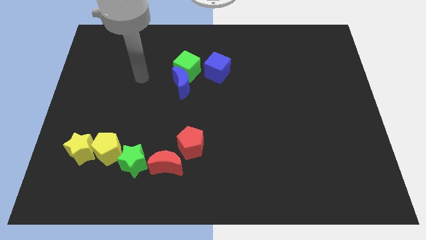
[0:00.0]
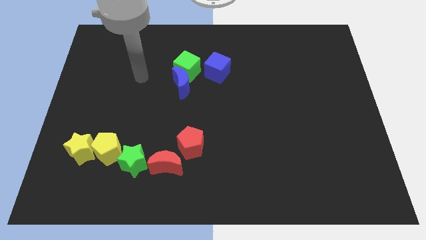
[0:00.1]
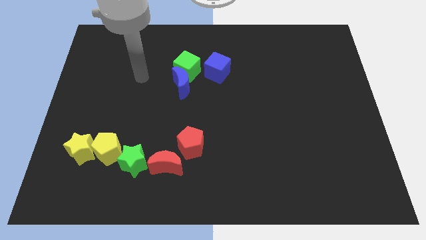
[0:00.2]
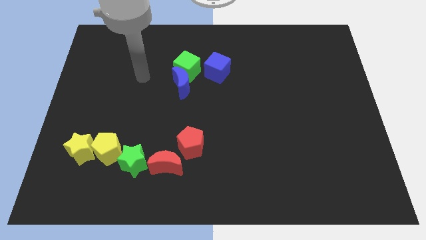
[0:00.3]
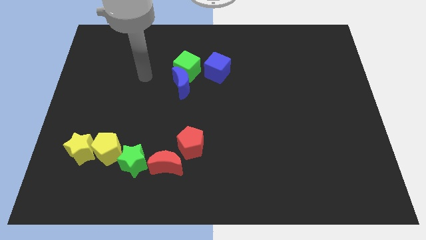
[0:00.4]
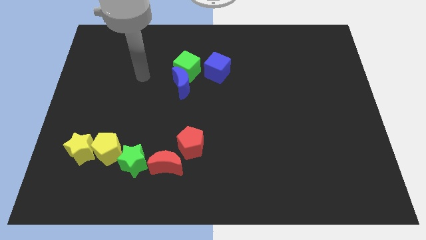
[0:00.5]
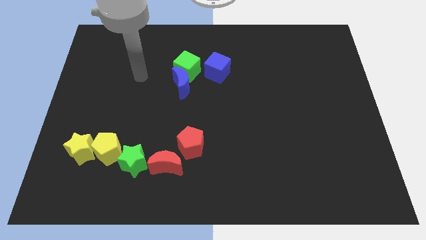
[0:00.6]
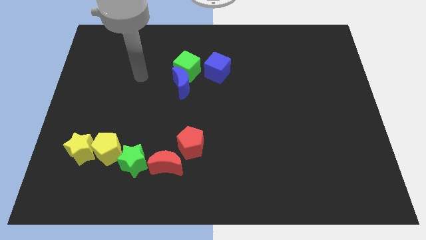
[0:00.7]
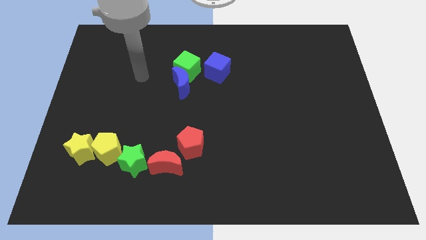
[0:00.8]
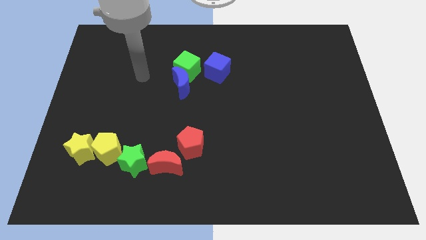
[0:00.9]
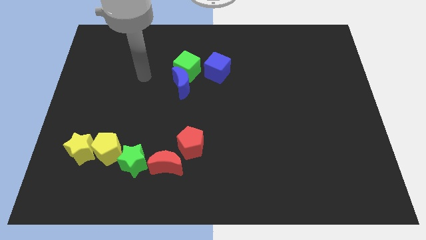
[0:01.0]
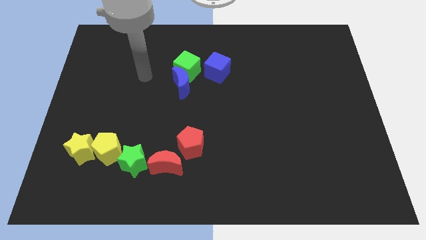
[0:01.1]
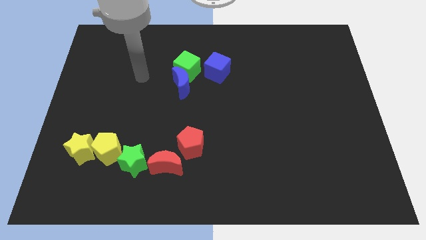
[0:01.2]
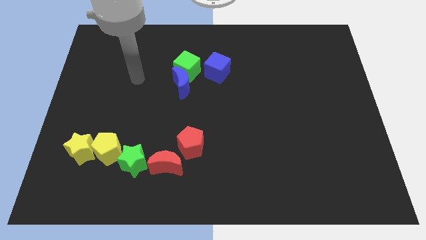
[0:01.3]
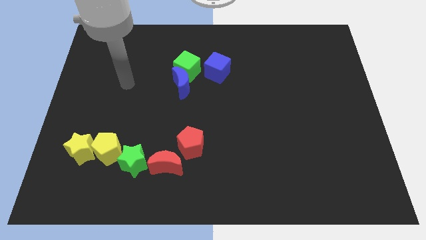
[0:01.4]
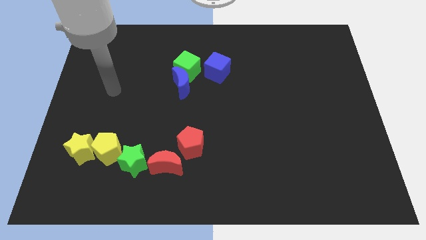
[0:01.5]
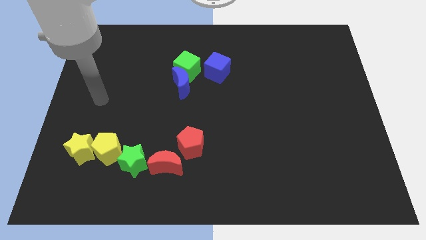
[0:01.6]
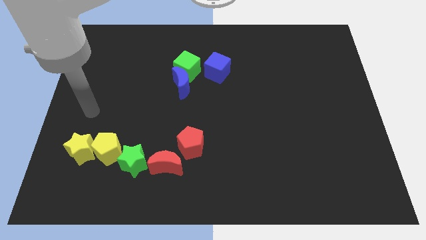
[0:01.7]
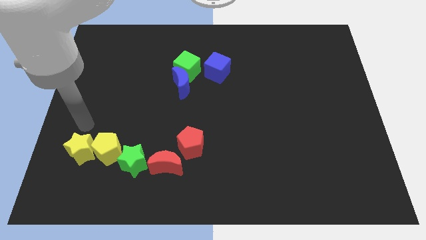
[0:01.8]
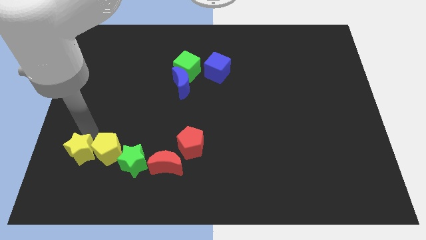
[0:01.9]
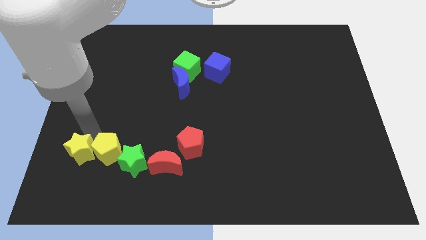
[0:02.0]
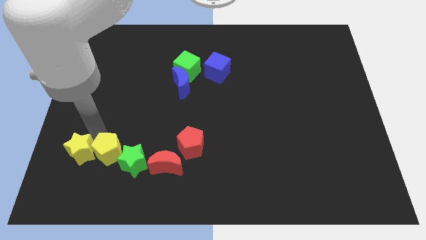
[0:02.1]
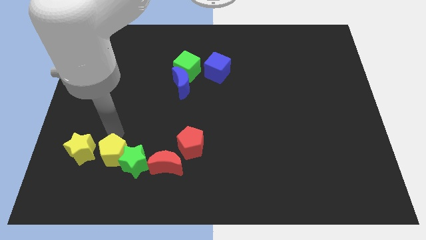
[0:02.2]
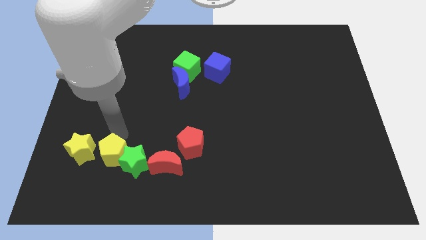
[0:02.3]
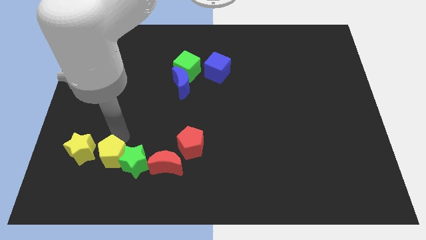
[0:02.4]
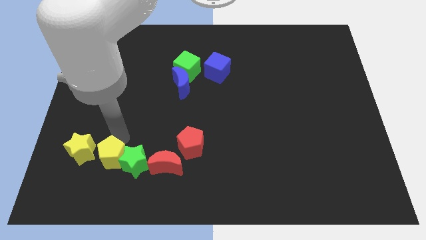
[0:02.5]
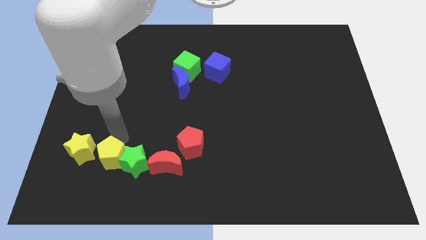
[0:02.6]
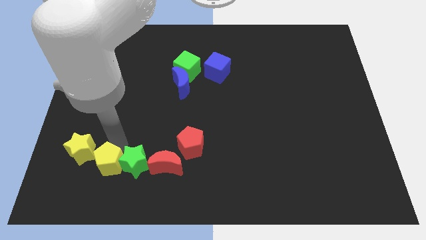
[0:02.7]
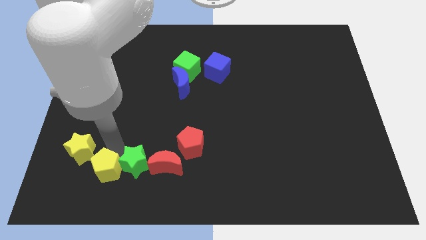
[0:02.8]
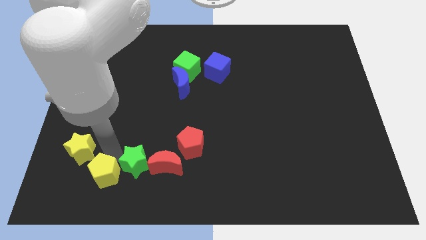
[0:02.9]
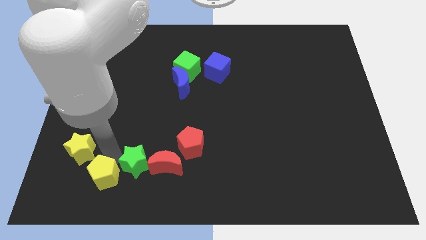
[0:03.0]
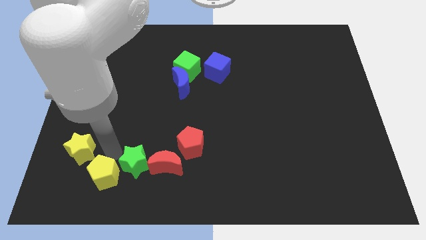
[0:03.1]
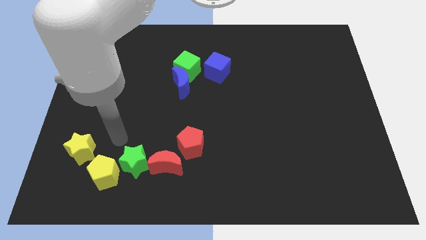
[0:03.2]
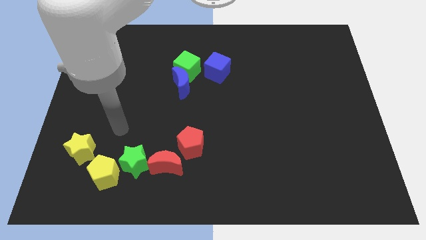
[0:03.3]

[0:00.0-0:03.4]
slide the yellow pentagon towards the bottom

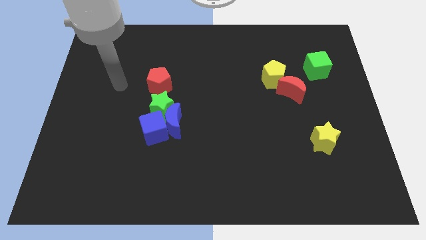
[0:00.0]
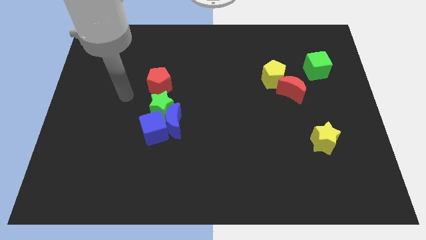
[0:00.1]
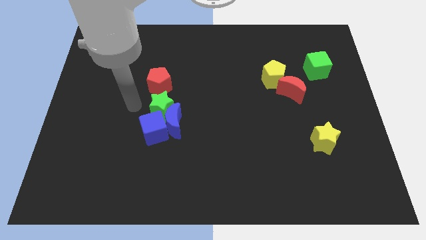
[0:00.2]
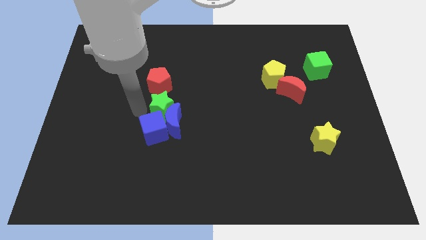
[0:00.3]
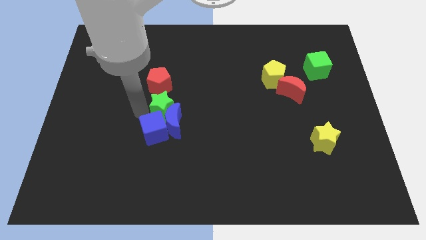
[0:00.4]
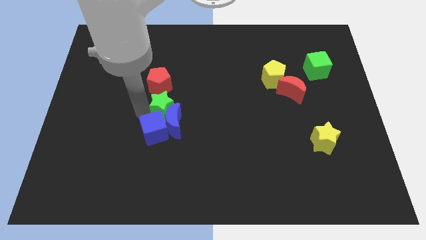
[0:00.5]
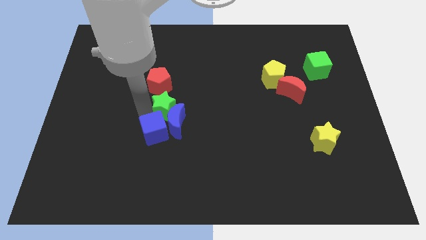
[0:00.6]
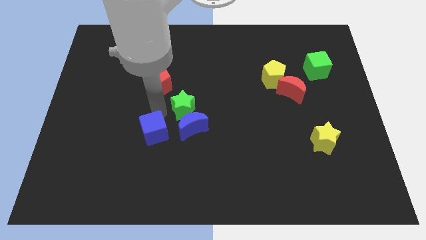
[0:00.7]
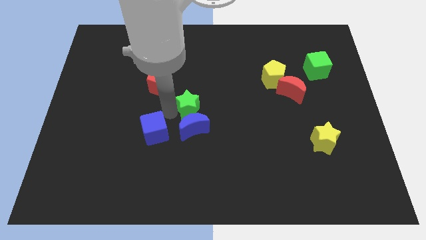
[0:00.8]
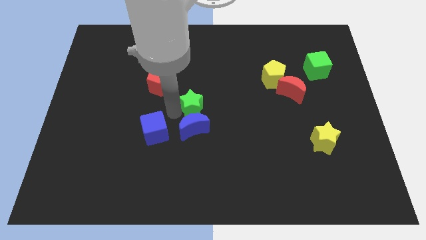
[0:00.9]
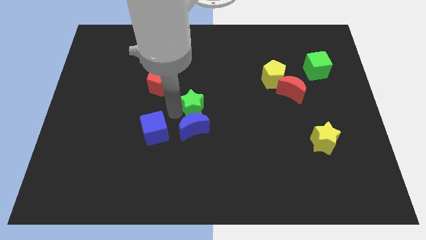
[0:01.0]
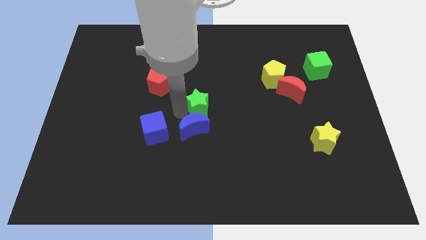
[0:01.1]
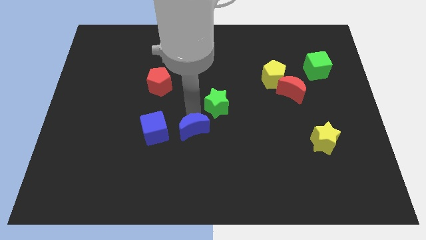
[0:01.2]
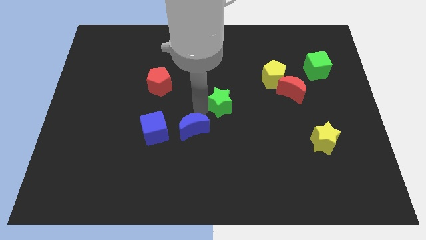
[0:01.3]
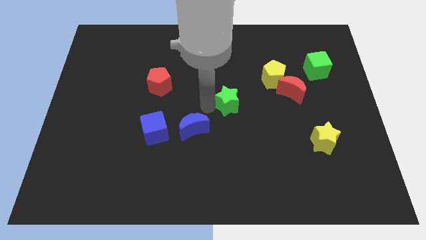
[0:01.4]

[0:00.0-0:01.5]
separate green star from the blue blocks

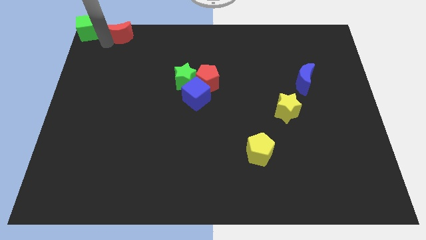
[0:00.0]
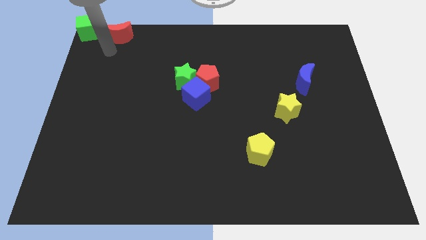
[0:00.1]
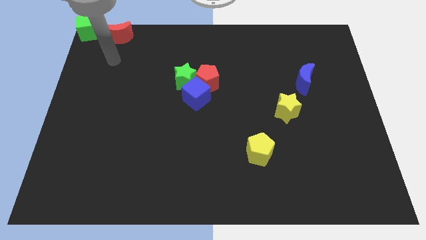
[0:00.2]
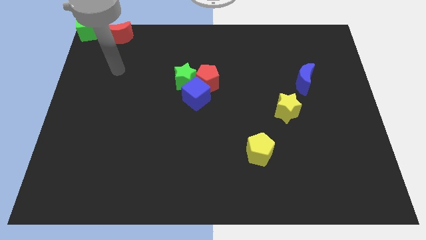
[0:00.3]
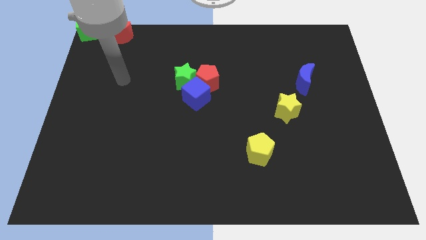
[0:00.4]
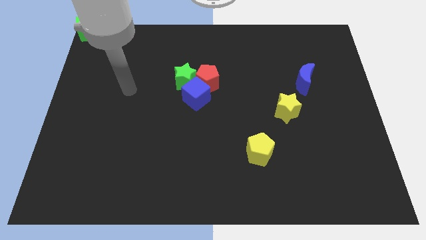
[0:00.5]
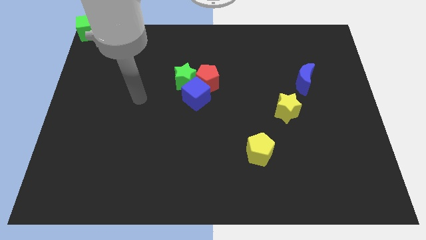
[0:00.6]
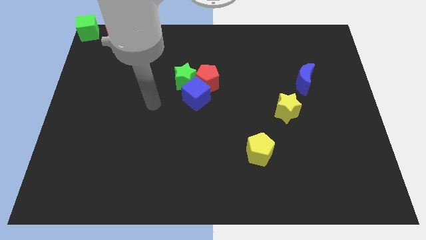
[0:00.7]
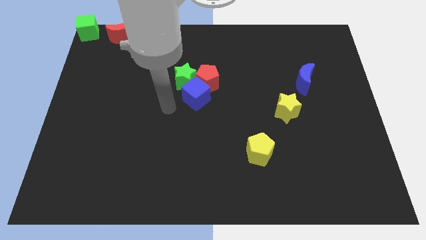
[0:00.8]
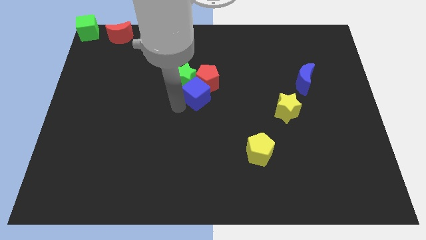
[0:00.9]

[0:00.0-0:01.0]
move your arm away from the red crescent

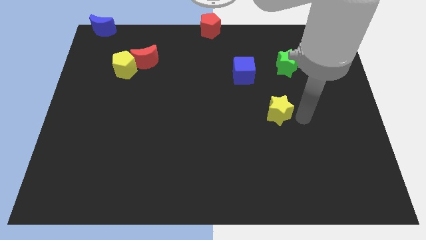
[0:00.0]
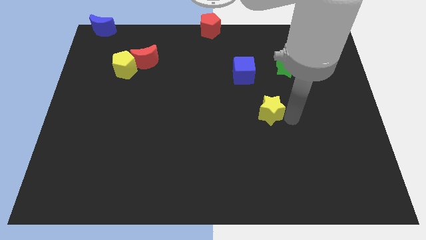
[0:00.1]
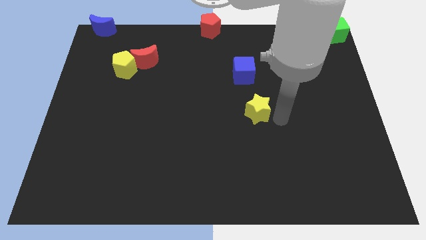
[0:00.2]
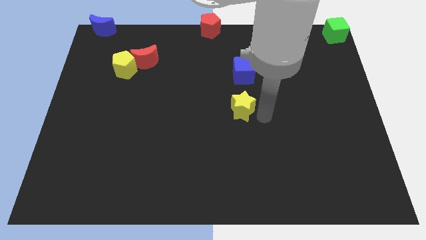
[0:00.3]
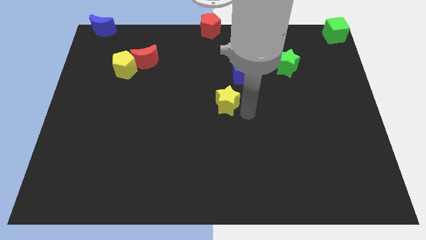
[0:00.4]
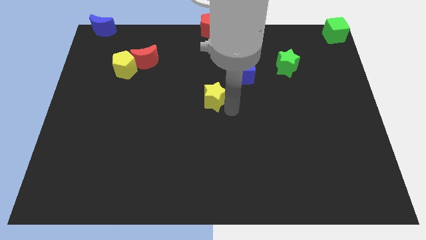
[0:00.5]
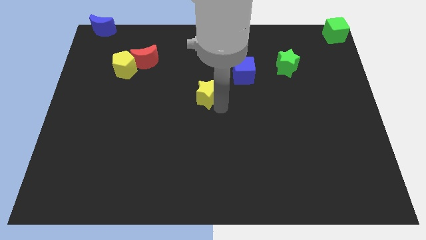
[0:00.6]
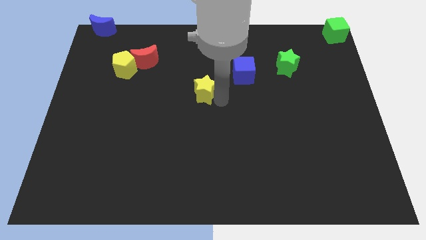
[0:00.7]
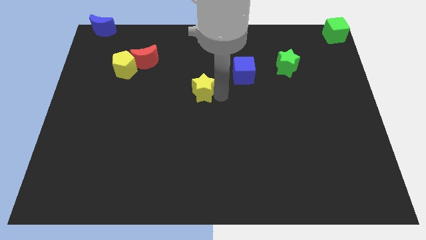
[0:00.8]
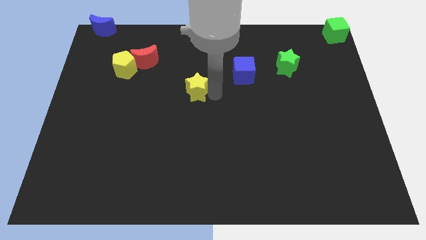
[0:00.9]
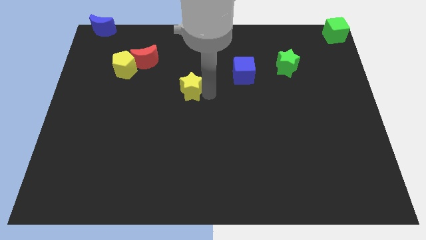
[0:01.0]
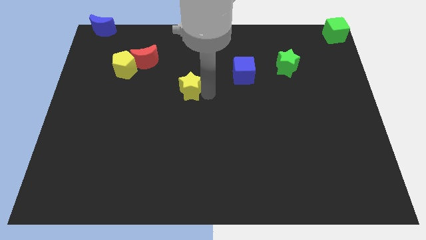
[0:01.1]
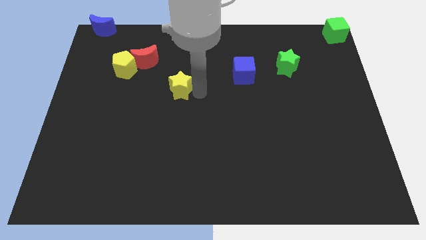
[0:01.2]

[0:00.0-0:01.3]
push the yellow star towards the yellow pentagon

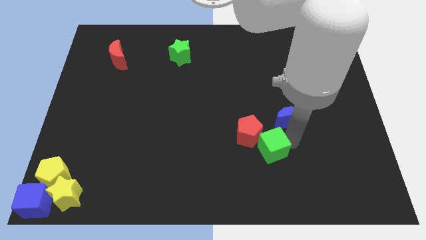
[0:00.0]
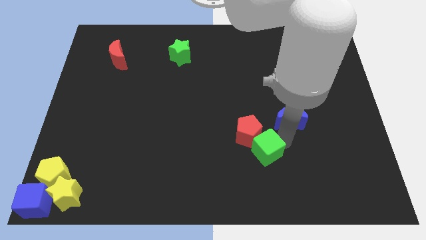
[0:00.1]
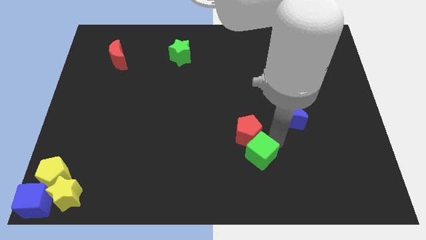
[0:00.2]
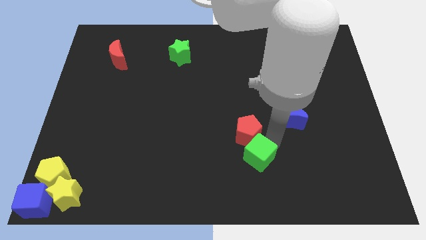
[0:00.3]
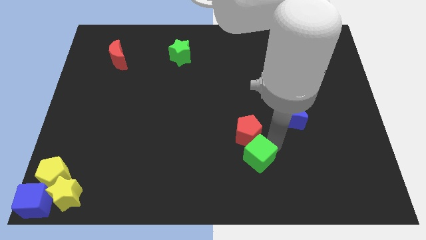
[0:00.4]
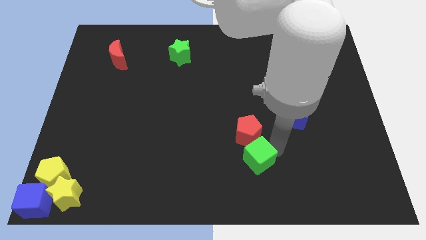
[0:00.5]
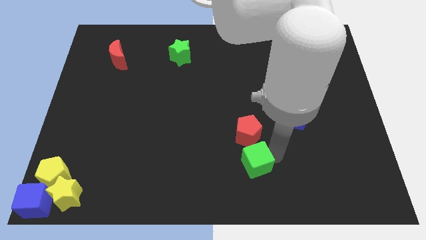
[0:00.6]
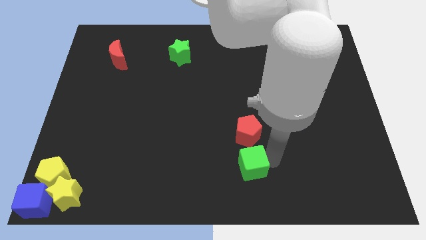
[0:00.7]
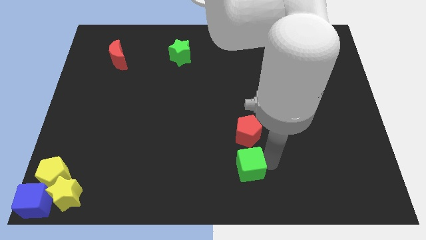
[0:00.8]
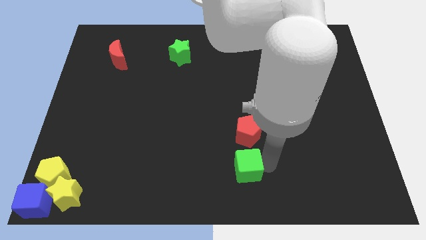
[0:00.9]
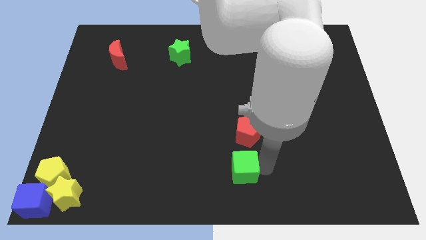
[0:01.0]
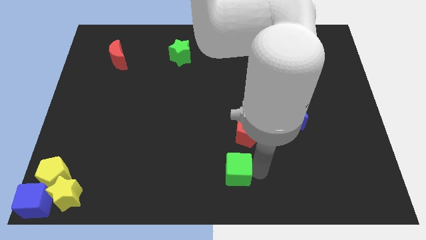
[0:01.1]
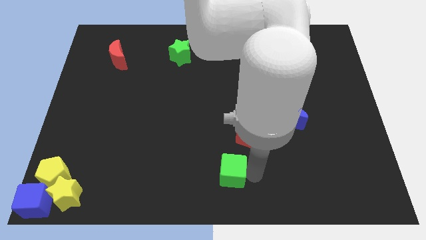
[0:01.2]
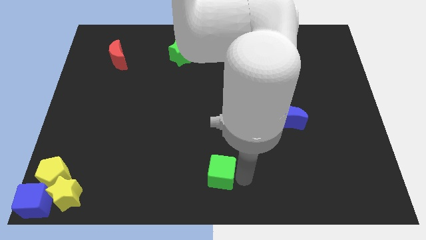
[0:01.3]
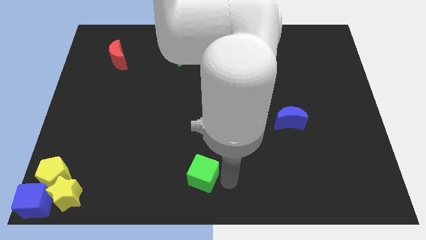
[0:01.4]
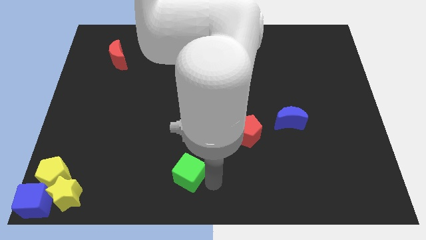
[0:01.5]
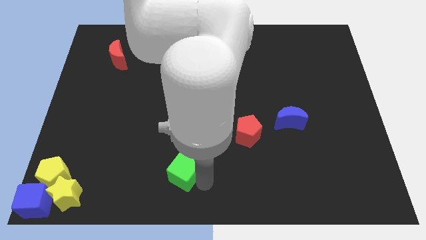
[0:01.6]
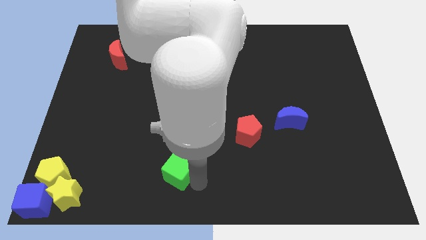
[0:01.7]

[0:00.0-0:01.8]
separate the green cube from red pentagon
